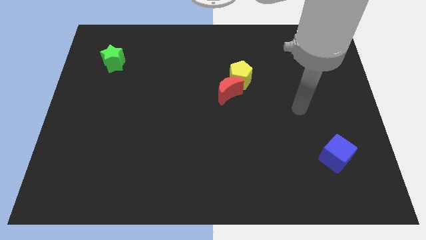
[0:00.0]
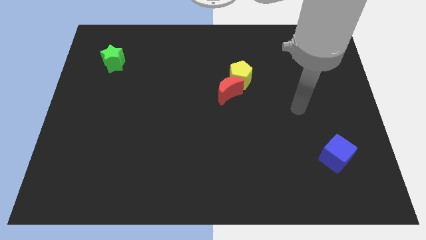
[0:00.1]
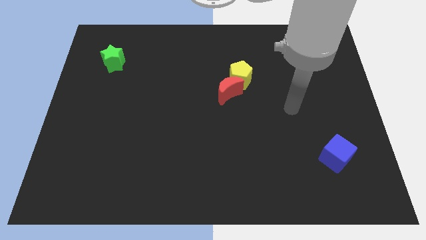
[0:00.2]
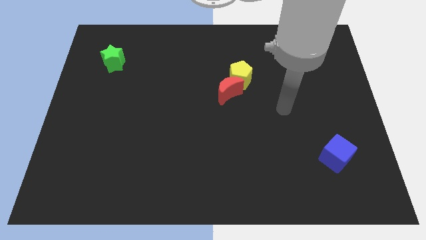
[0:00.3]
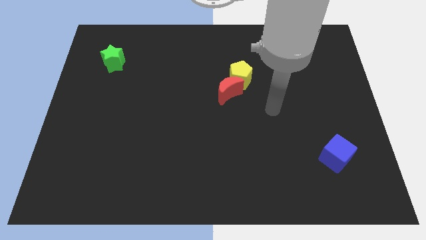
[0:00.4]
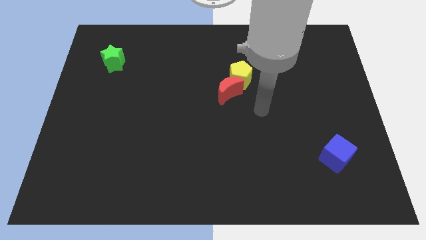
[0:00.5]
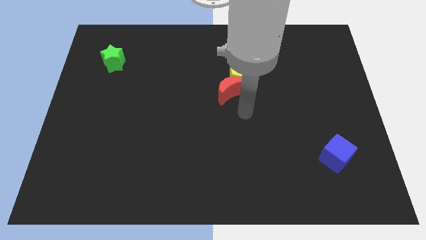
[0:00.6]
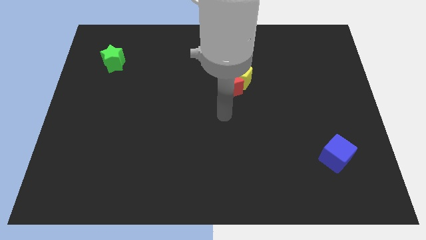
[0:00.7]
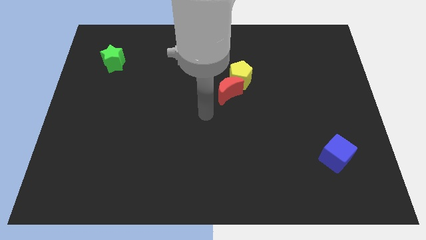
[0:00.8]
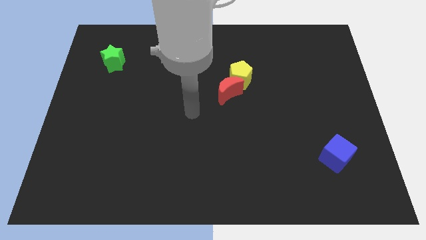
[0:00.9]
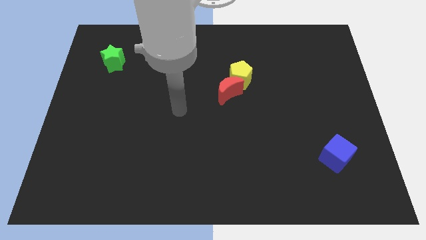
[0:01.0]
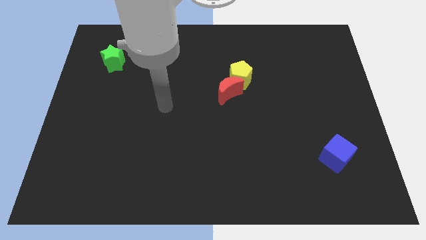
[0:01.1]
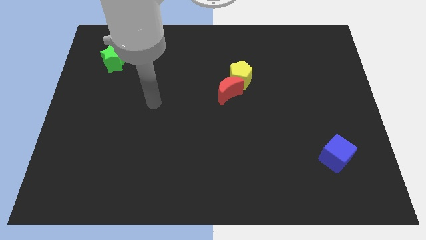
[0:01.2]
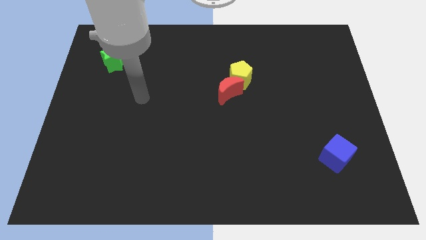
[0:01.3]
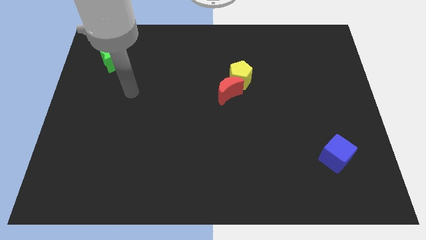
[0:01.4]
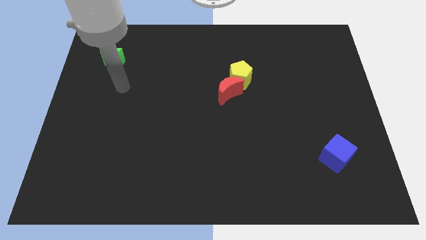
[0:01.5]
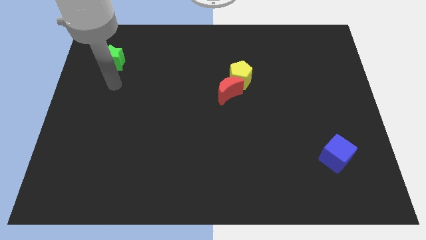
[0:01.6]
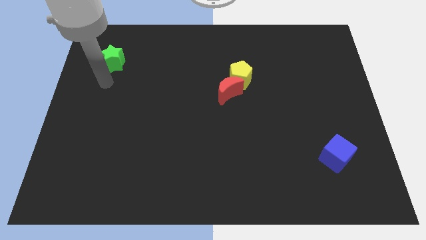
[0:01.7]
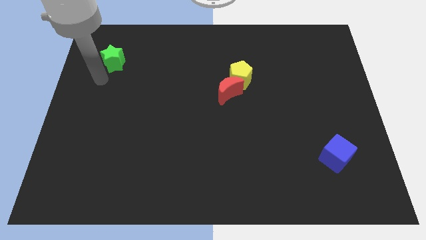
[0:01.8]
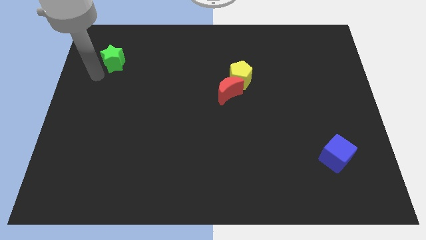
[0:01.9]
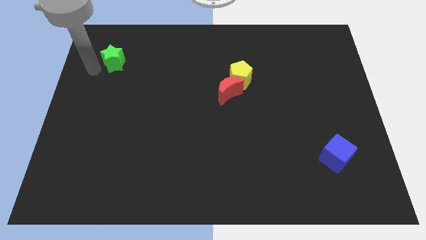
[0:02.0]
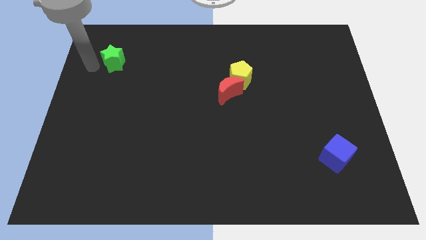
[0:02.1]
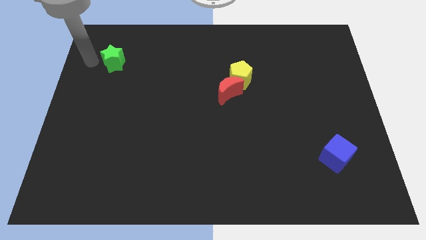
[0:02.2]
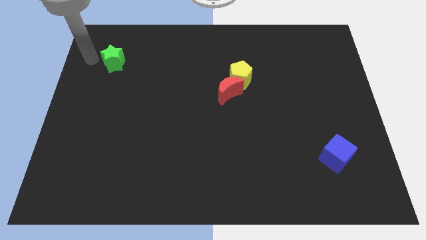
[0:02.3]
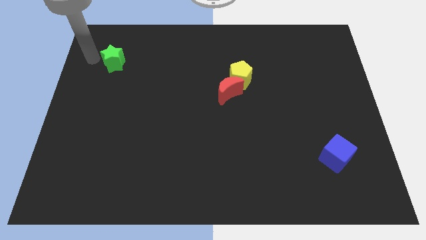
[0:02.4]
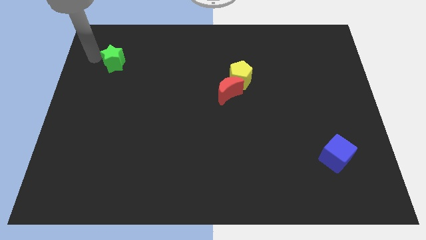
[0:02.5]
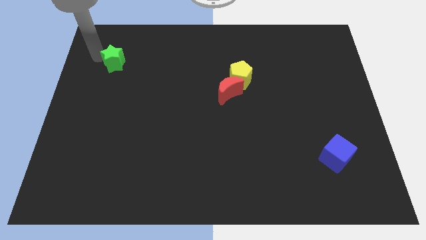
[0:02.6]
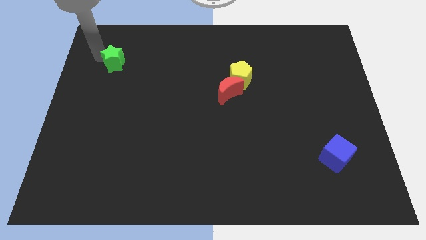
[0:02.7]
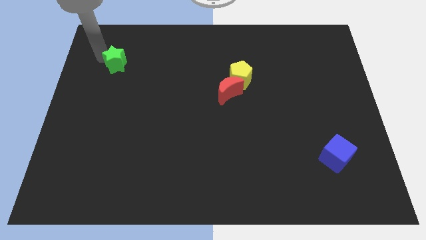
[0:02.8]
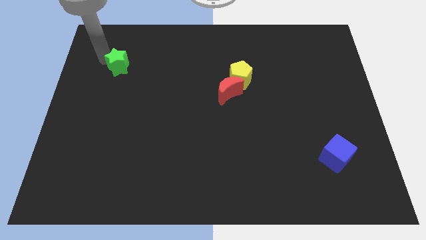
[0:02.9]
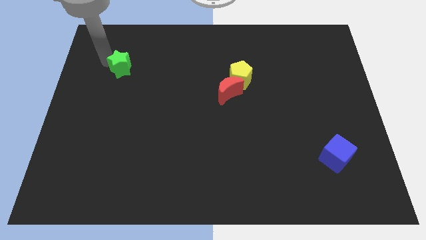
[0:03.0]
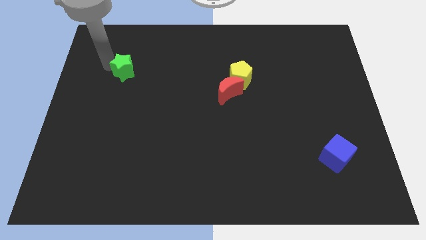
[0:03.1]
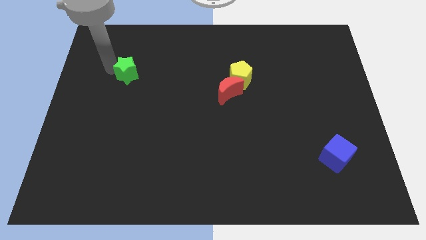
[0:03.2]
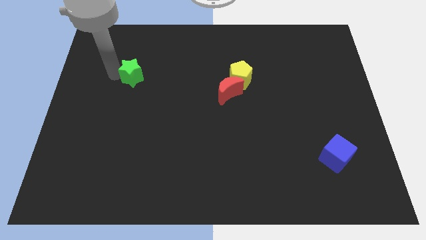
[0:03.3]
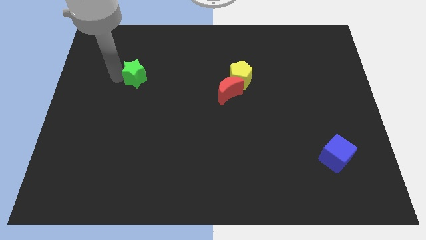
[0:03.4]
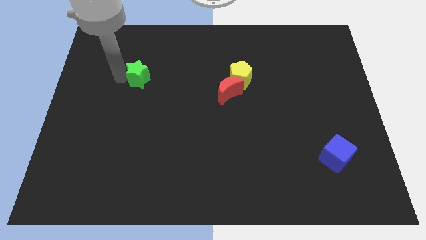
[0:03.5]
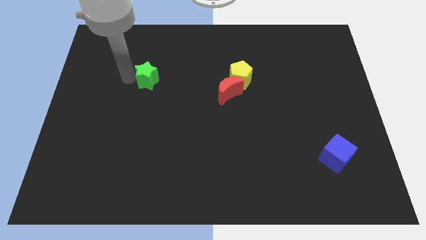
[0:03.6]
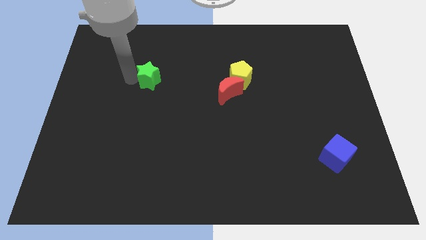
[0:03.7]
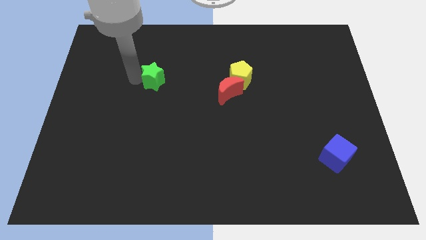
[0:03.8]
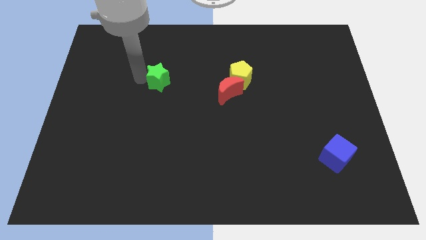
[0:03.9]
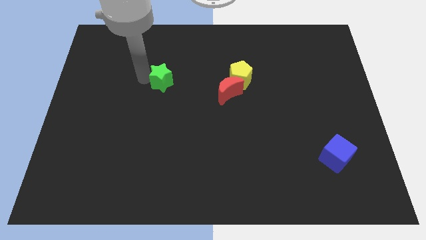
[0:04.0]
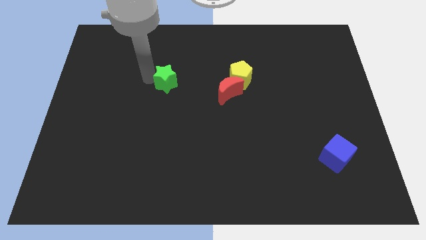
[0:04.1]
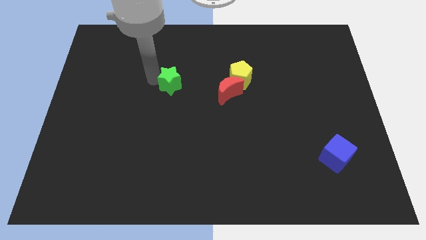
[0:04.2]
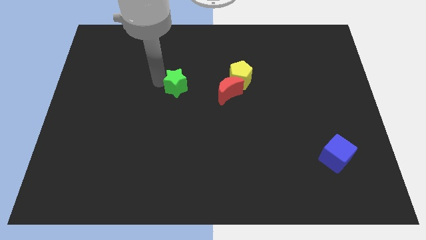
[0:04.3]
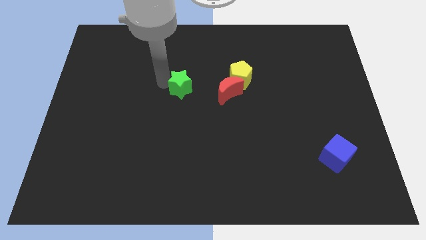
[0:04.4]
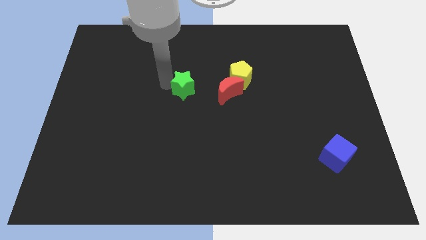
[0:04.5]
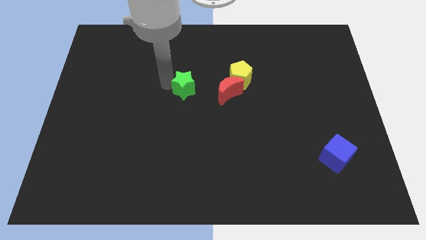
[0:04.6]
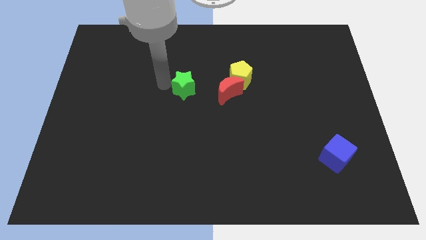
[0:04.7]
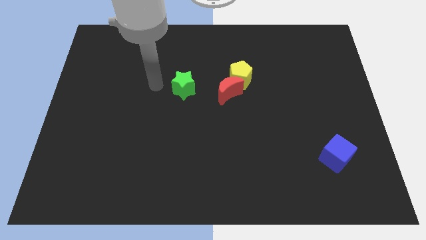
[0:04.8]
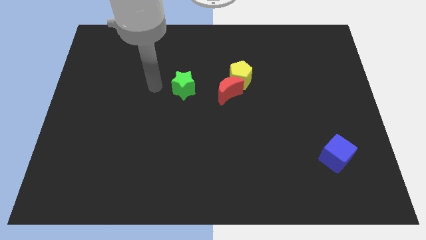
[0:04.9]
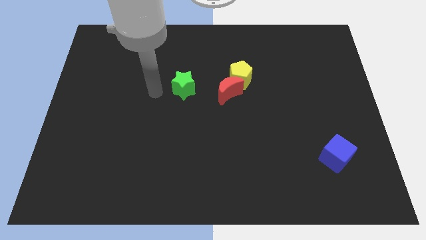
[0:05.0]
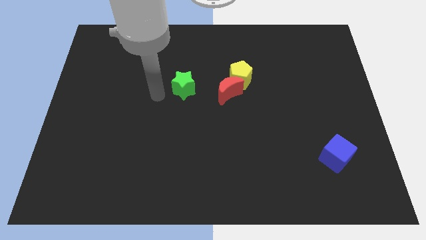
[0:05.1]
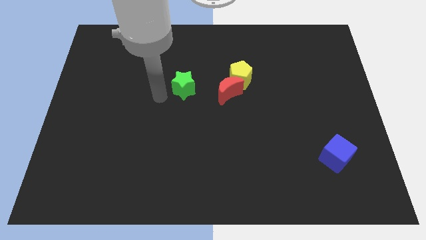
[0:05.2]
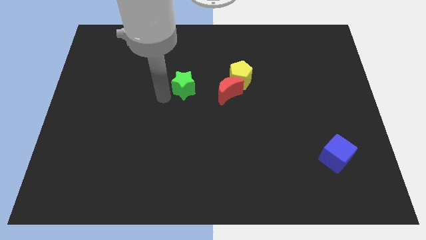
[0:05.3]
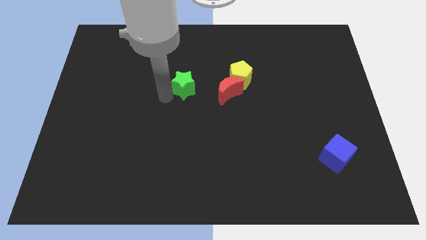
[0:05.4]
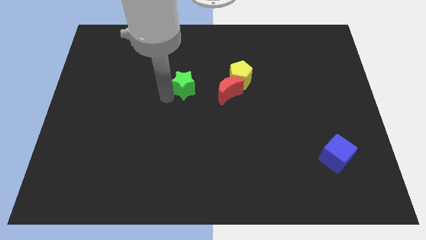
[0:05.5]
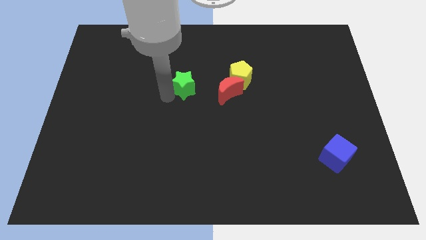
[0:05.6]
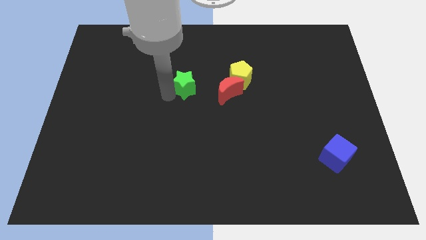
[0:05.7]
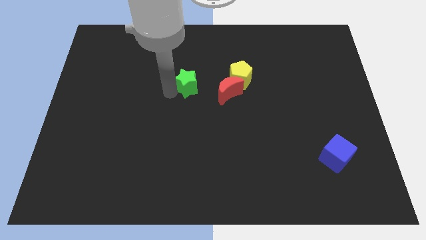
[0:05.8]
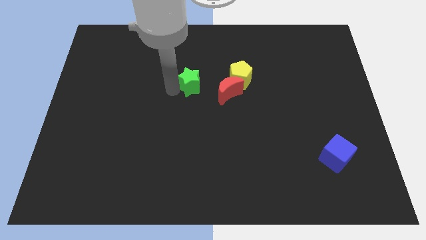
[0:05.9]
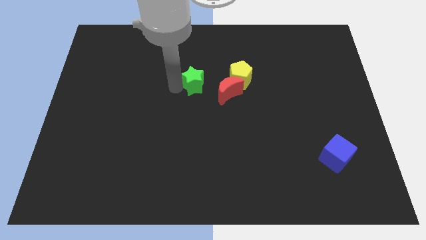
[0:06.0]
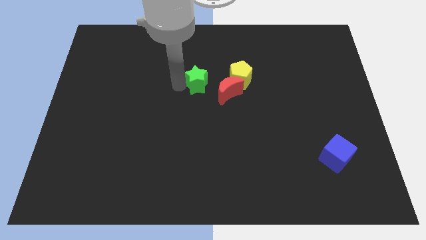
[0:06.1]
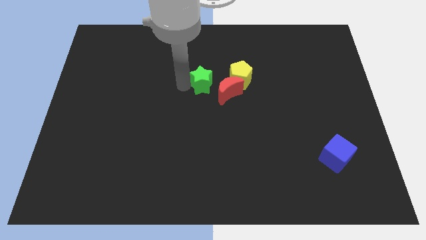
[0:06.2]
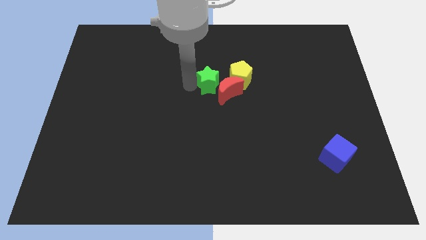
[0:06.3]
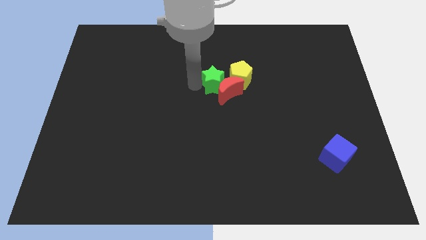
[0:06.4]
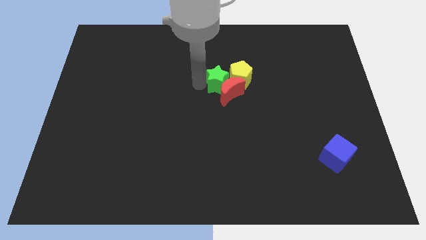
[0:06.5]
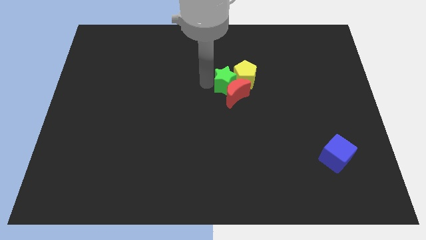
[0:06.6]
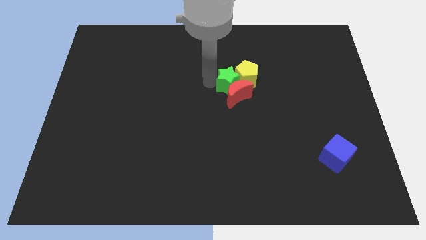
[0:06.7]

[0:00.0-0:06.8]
move the green star next to the pentagon

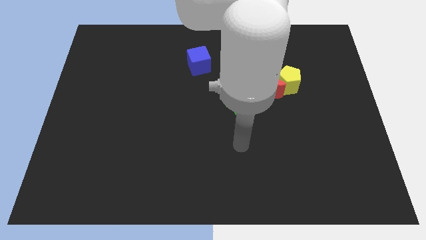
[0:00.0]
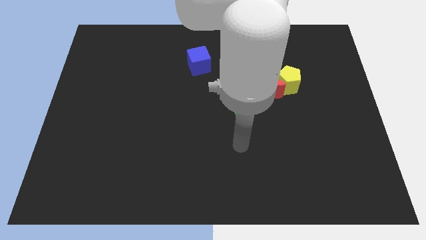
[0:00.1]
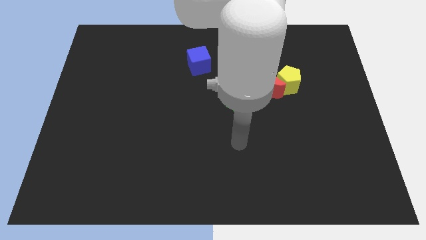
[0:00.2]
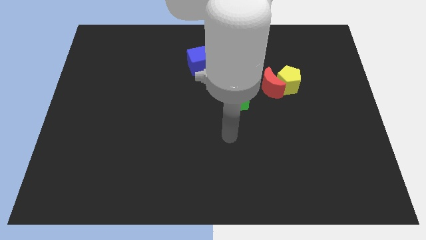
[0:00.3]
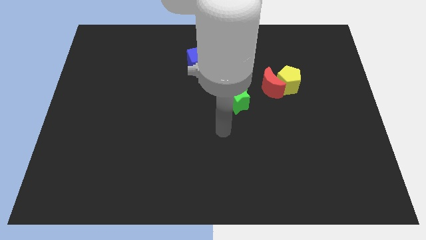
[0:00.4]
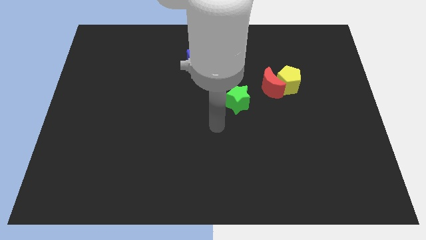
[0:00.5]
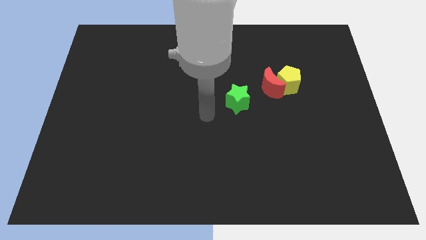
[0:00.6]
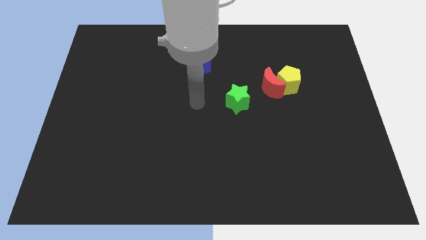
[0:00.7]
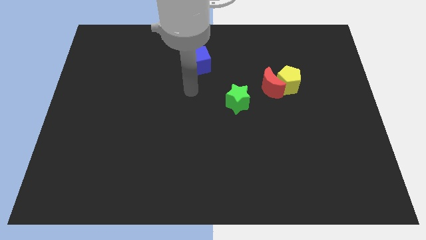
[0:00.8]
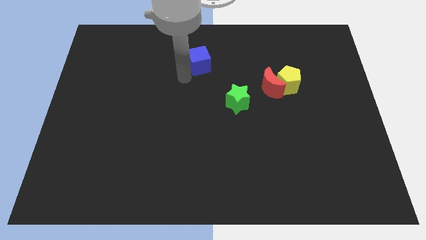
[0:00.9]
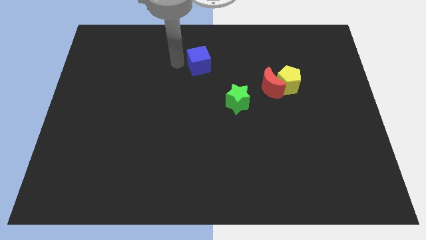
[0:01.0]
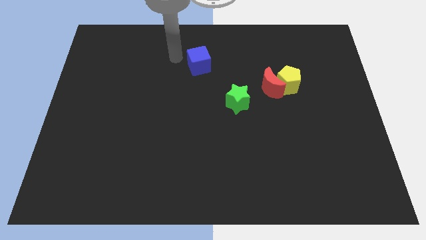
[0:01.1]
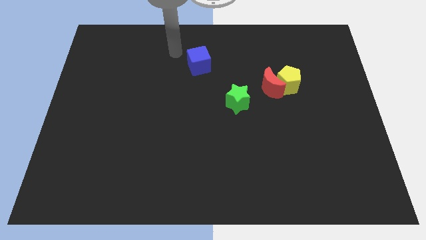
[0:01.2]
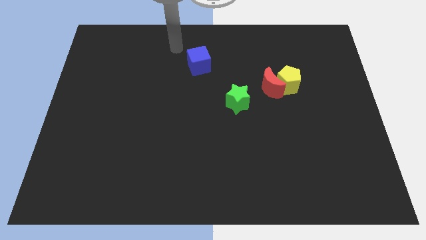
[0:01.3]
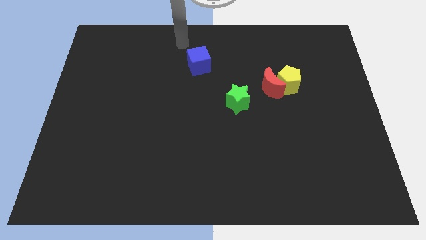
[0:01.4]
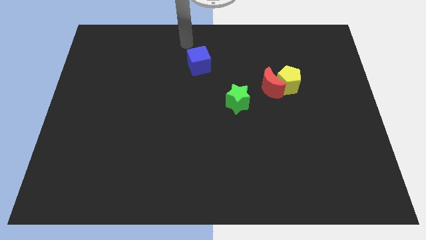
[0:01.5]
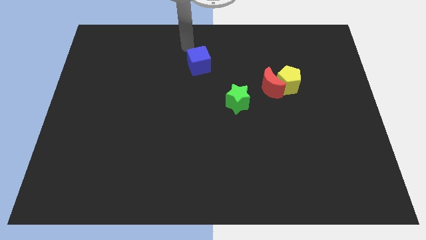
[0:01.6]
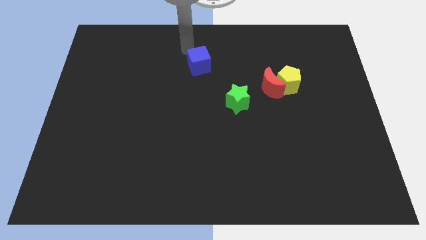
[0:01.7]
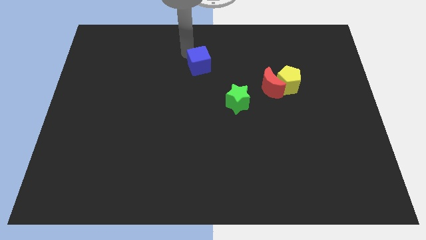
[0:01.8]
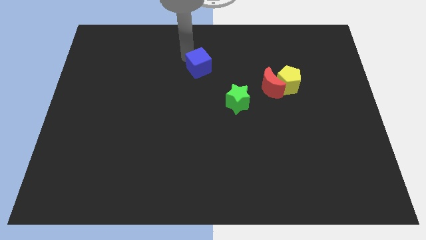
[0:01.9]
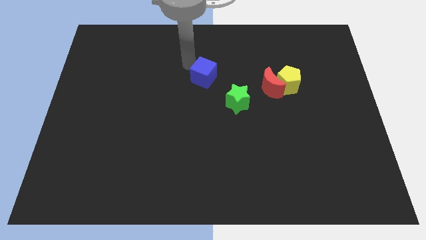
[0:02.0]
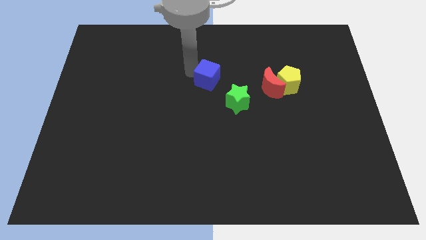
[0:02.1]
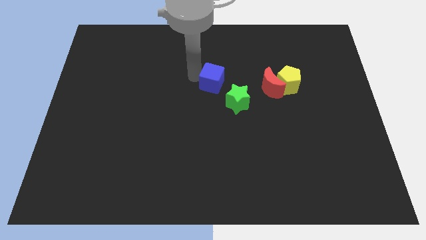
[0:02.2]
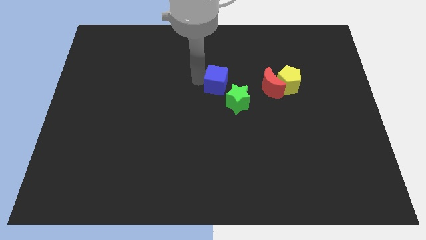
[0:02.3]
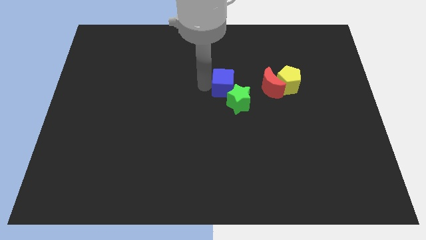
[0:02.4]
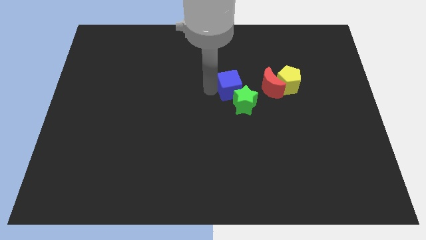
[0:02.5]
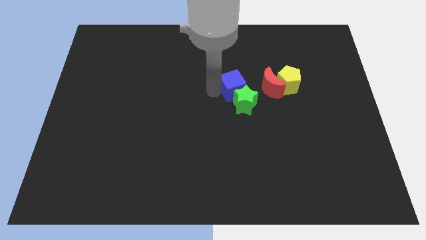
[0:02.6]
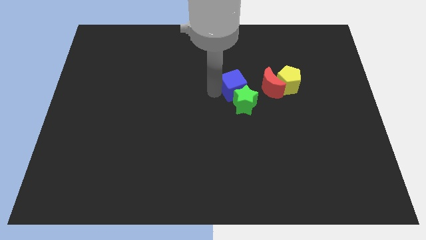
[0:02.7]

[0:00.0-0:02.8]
push the blue block close to the green block
